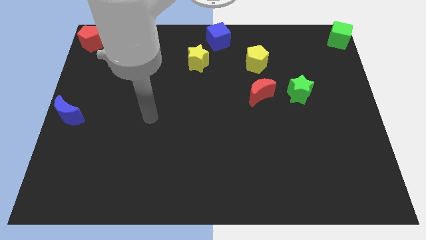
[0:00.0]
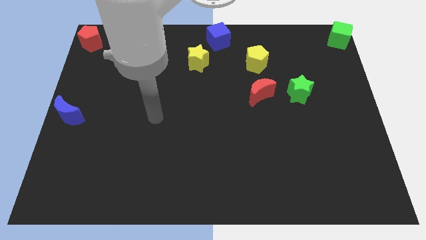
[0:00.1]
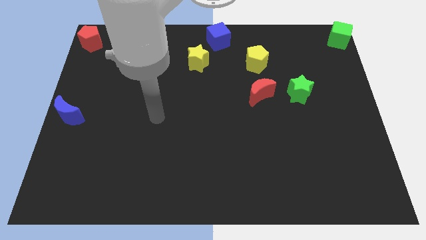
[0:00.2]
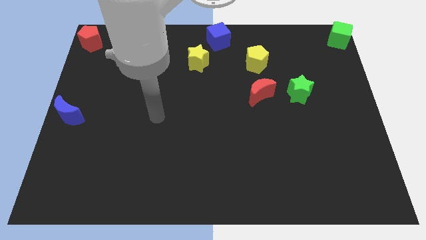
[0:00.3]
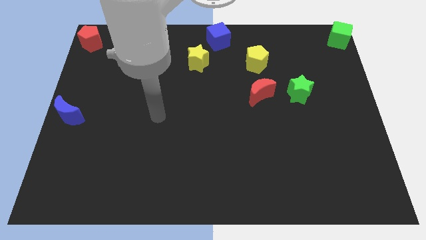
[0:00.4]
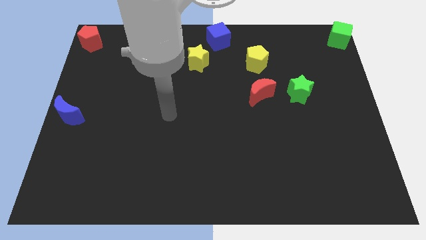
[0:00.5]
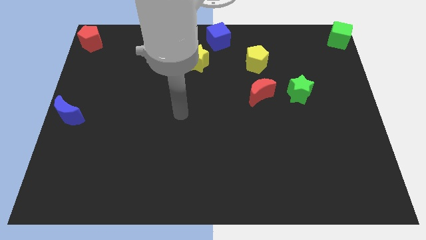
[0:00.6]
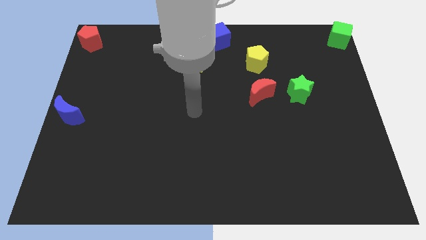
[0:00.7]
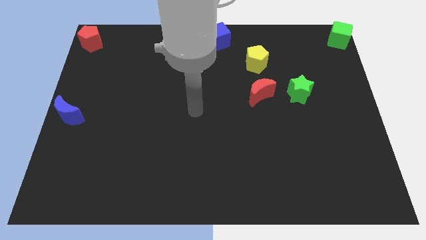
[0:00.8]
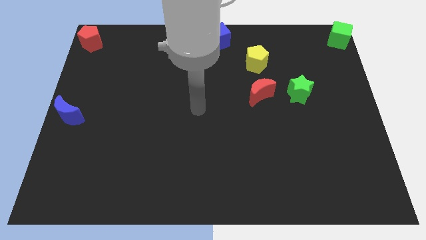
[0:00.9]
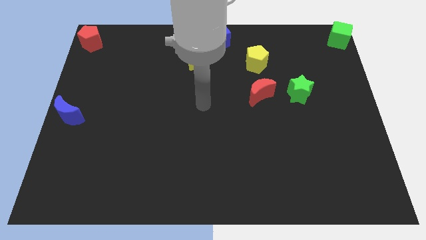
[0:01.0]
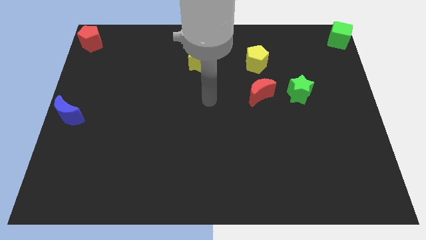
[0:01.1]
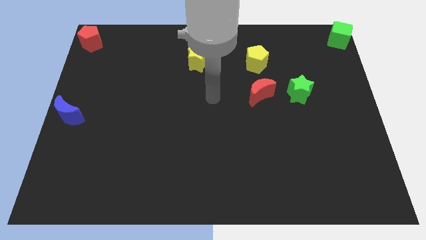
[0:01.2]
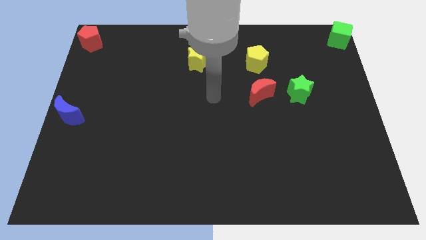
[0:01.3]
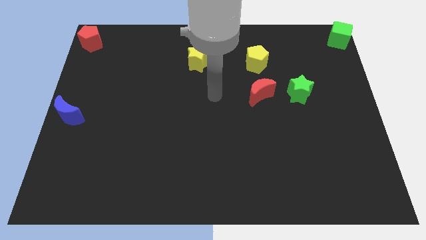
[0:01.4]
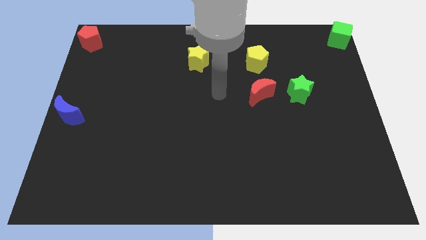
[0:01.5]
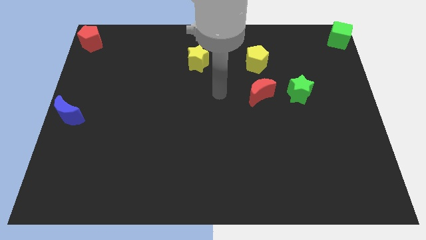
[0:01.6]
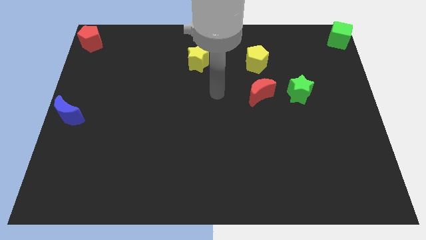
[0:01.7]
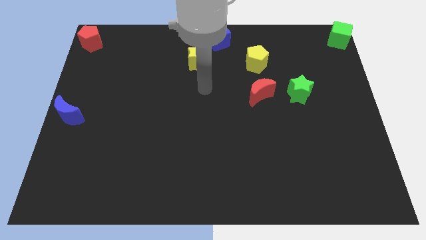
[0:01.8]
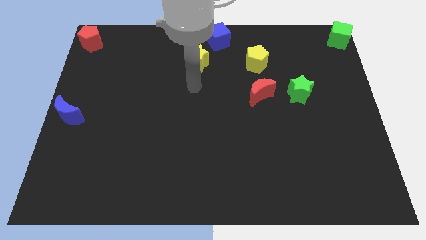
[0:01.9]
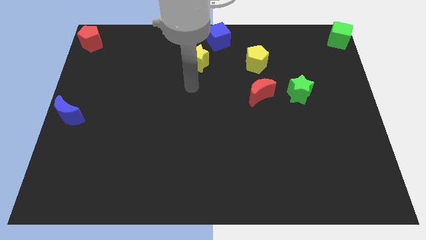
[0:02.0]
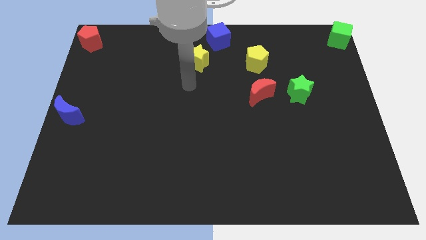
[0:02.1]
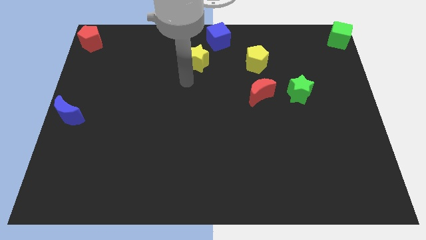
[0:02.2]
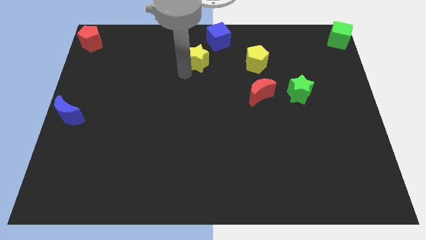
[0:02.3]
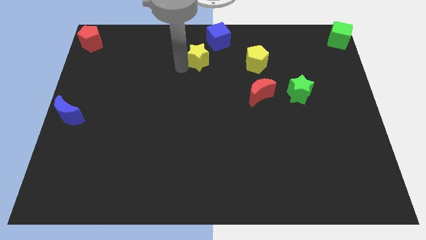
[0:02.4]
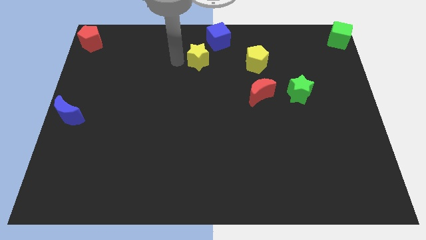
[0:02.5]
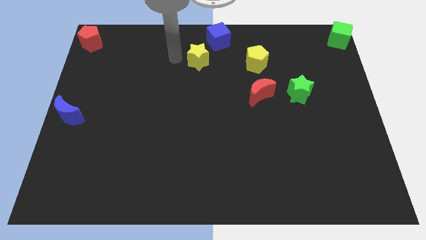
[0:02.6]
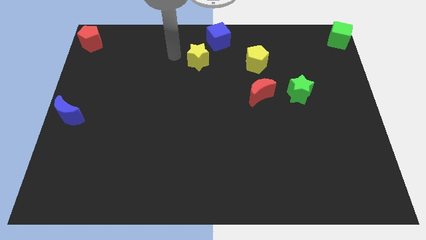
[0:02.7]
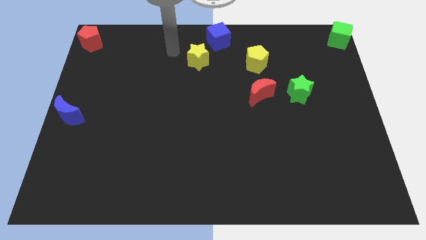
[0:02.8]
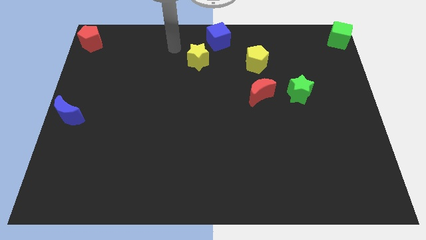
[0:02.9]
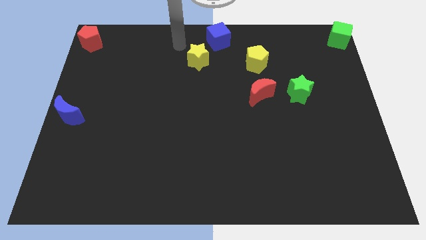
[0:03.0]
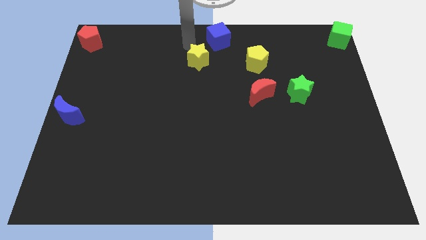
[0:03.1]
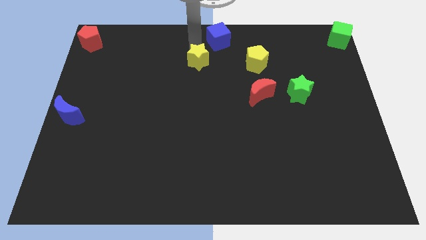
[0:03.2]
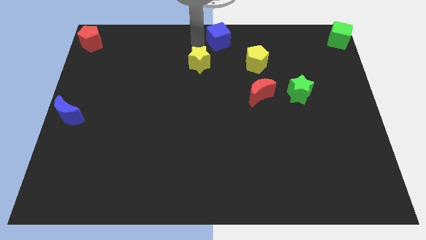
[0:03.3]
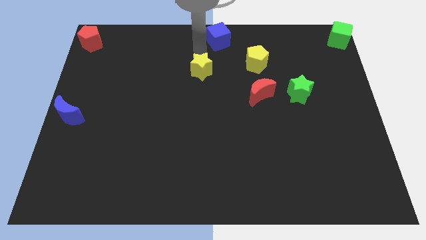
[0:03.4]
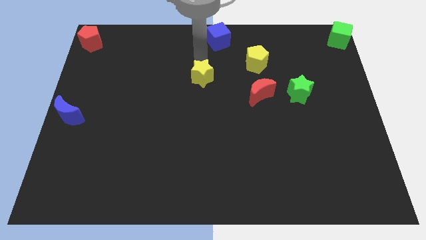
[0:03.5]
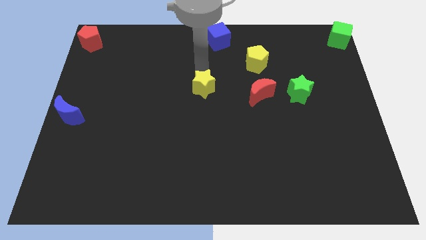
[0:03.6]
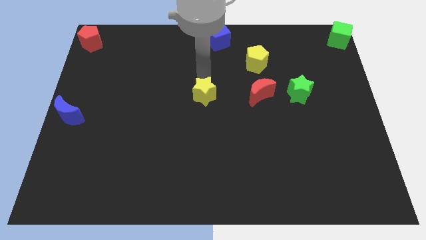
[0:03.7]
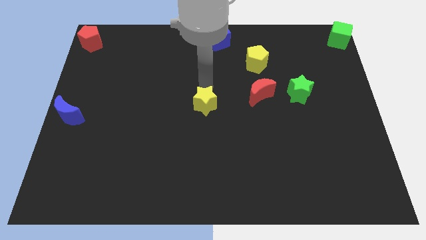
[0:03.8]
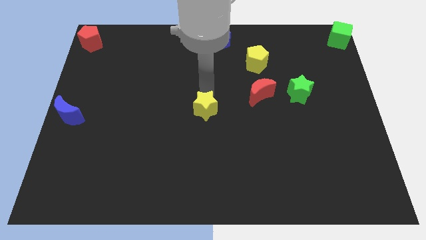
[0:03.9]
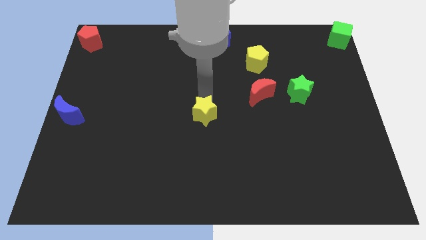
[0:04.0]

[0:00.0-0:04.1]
drag a yellow star to the center of the board

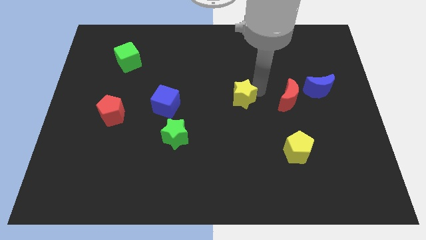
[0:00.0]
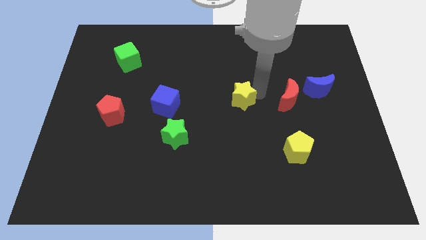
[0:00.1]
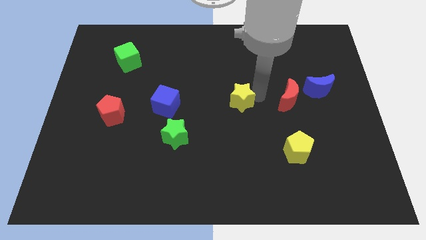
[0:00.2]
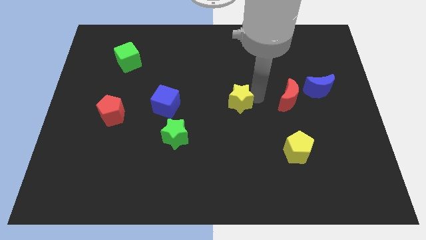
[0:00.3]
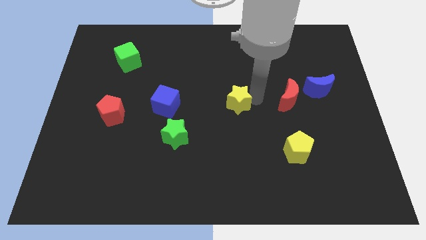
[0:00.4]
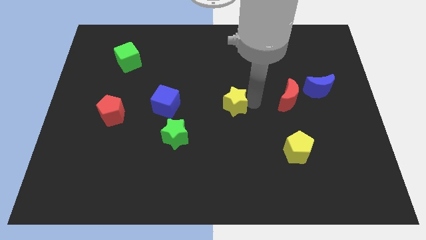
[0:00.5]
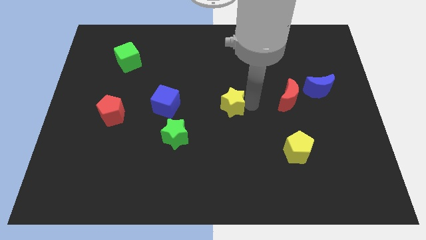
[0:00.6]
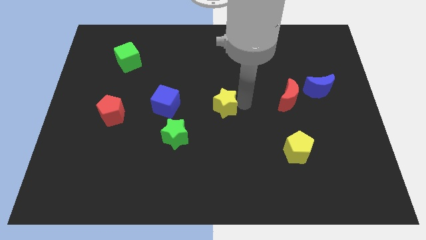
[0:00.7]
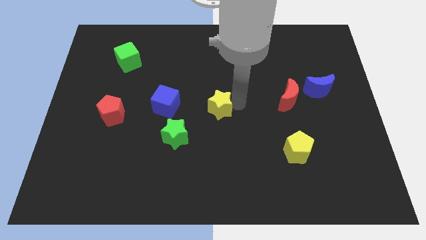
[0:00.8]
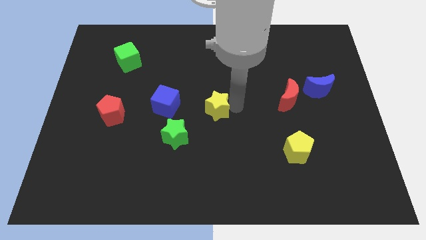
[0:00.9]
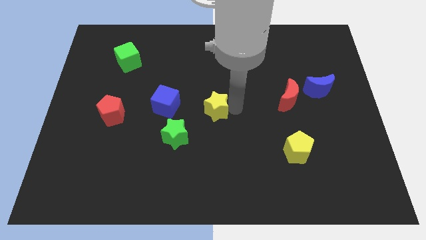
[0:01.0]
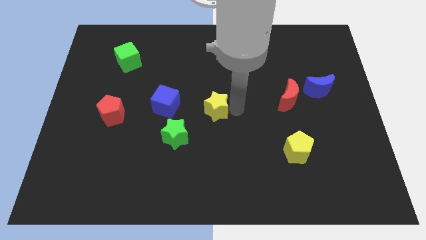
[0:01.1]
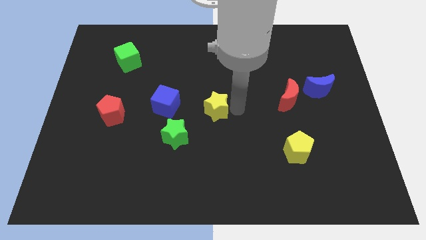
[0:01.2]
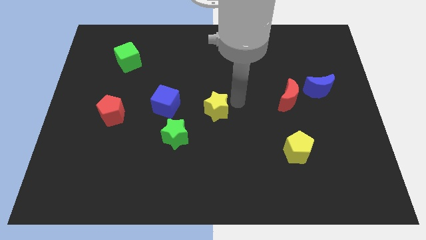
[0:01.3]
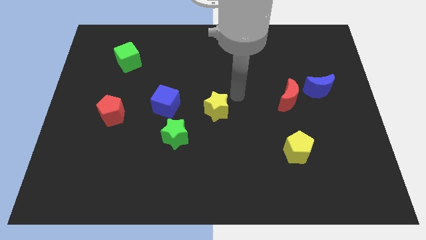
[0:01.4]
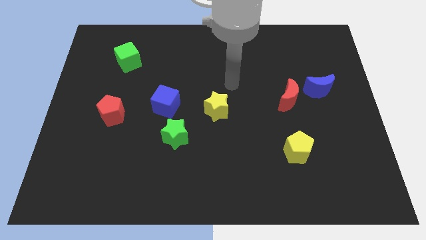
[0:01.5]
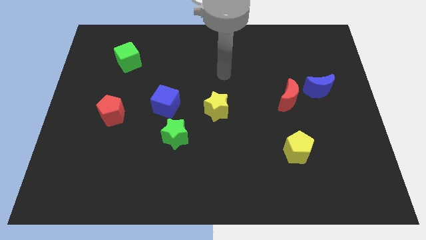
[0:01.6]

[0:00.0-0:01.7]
slide yellow star diagonally on the top right side of the green star

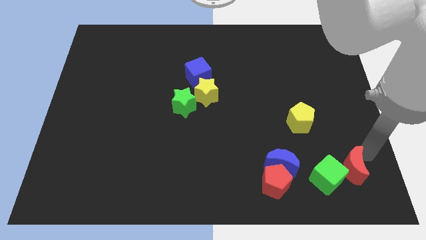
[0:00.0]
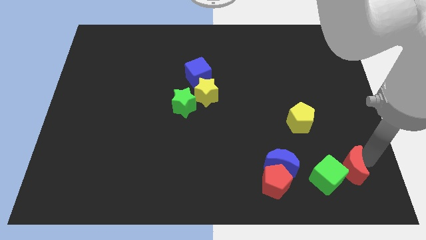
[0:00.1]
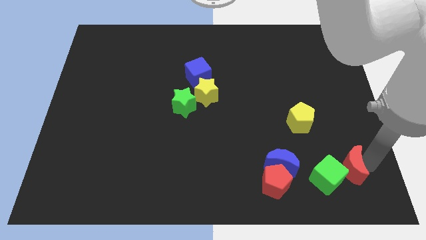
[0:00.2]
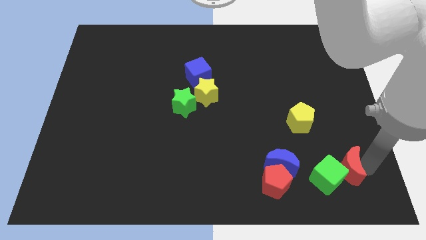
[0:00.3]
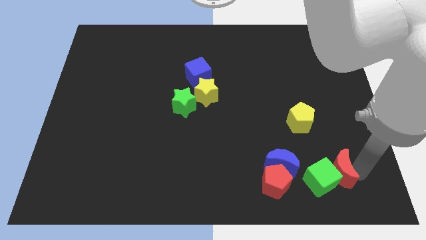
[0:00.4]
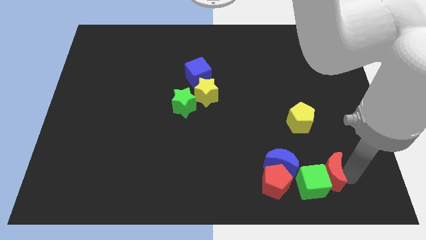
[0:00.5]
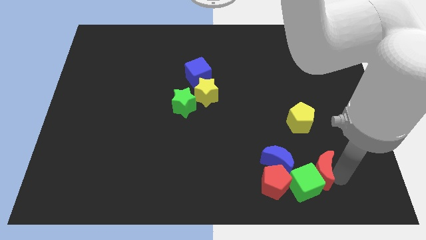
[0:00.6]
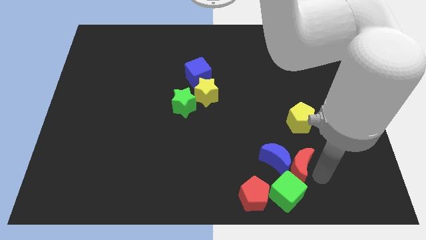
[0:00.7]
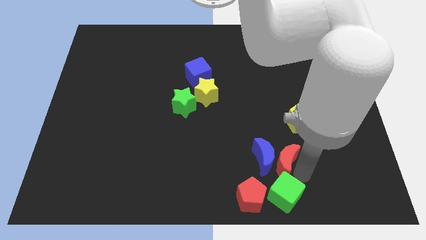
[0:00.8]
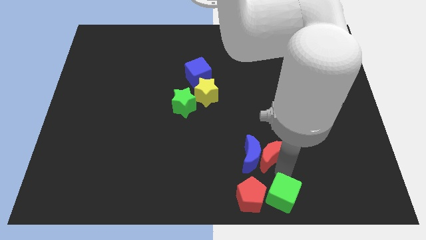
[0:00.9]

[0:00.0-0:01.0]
push the red moon into the group of blocks

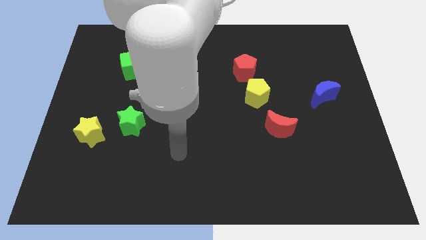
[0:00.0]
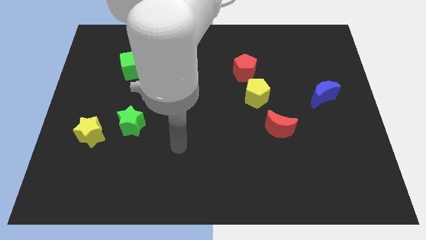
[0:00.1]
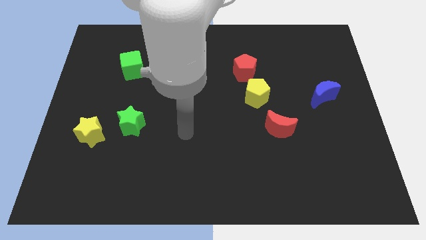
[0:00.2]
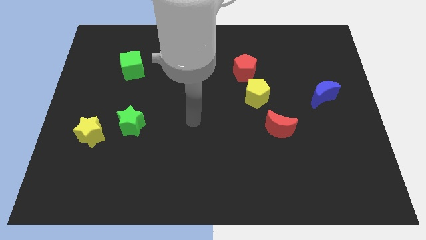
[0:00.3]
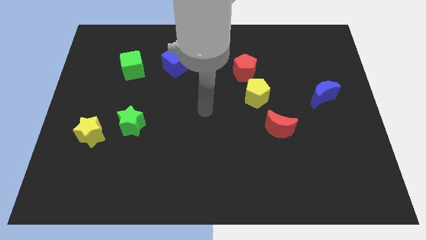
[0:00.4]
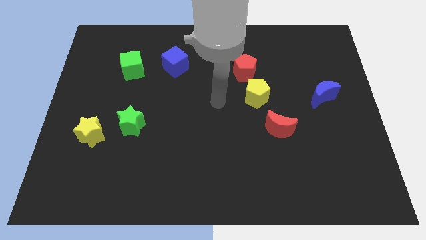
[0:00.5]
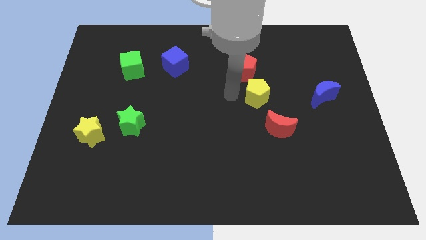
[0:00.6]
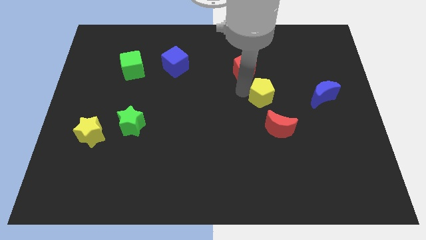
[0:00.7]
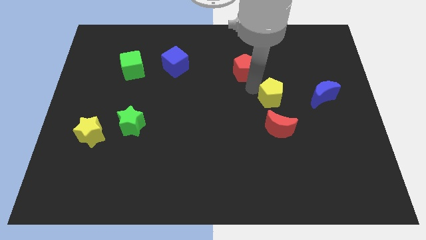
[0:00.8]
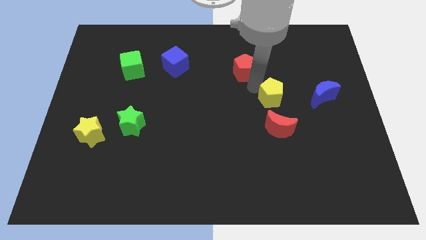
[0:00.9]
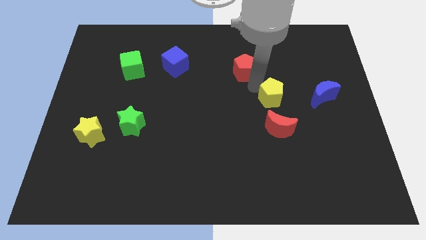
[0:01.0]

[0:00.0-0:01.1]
place your arm in between red pentagon and yellow pentagon

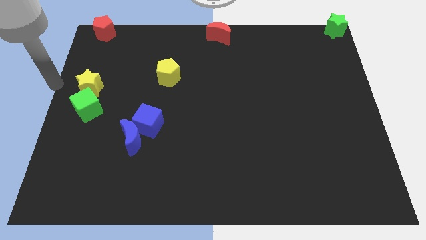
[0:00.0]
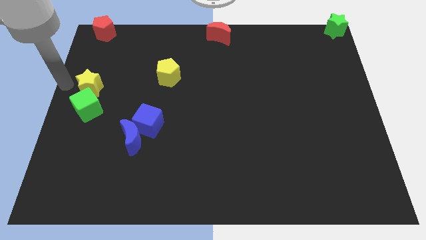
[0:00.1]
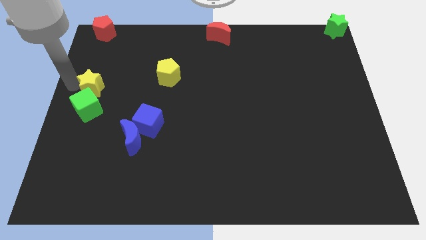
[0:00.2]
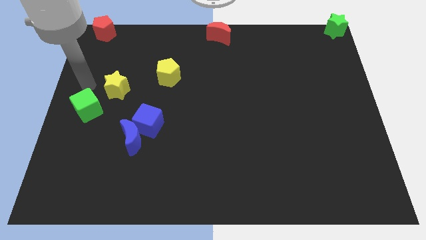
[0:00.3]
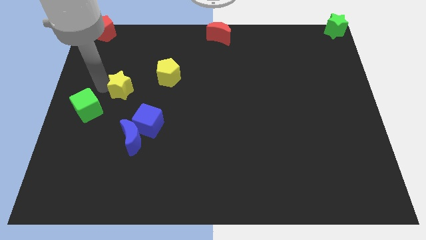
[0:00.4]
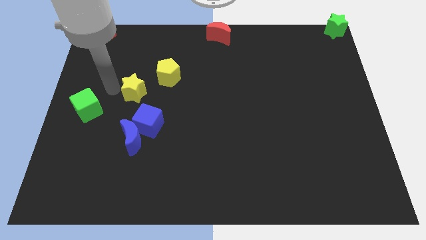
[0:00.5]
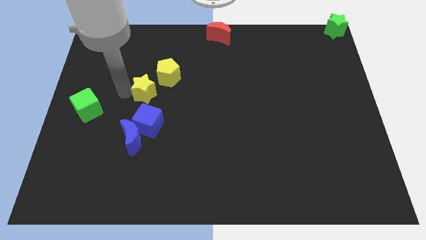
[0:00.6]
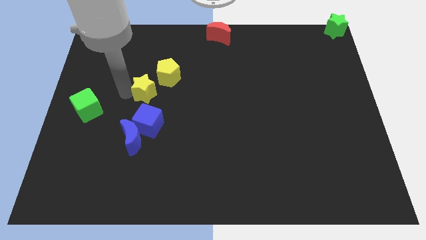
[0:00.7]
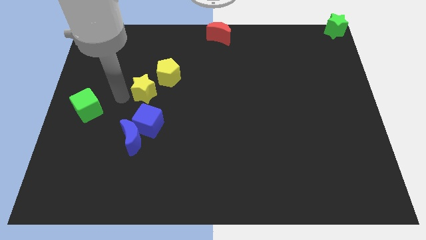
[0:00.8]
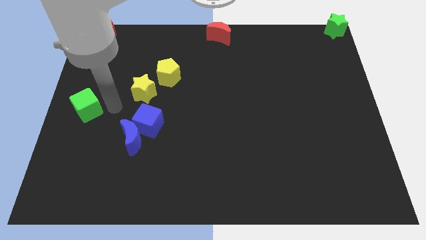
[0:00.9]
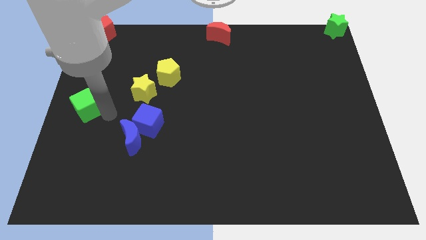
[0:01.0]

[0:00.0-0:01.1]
separate yellow star from green cube
